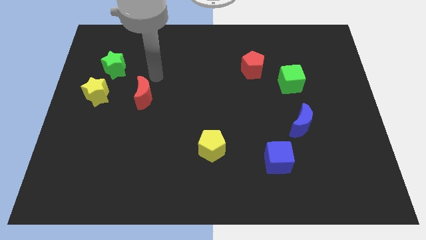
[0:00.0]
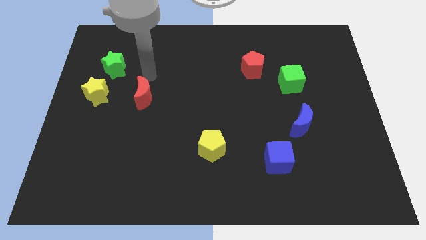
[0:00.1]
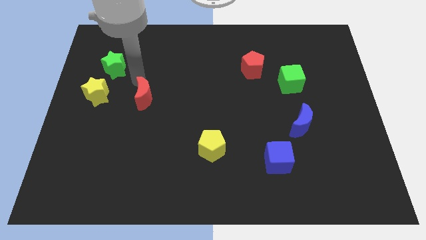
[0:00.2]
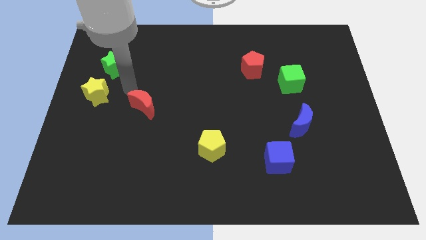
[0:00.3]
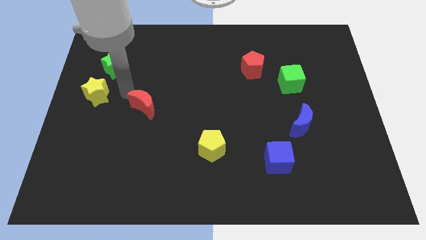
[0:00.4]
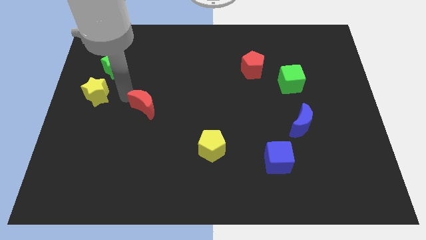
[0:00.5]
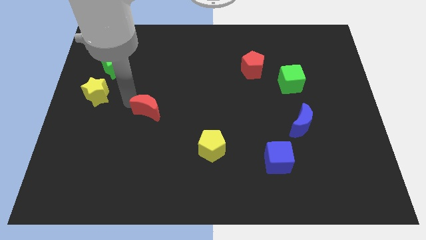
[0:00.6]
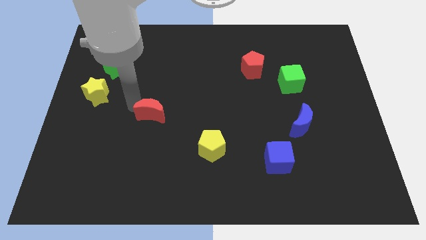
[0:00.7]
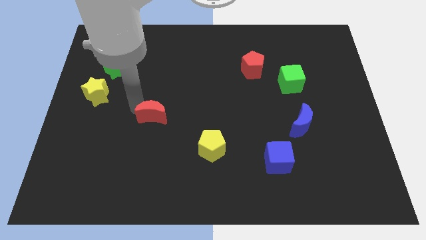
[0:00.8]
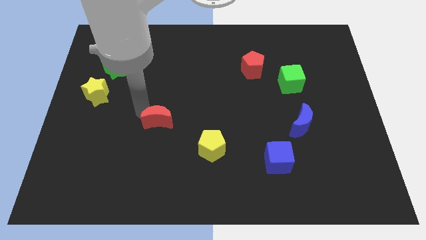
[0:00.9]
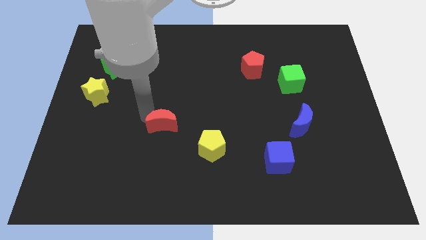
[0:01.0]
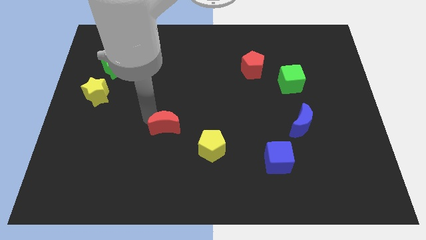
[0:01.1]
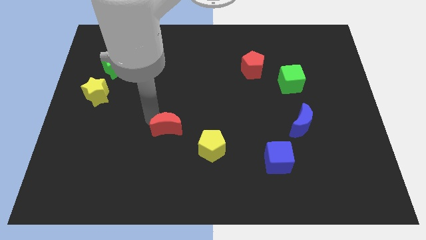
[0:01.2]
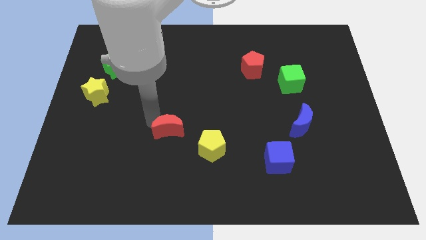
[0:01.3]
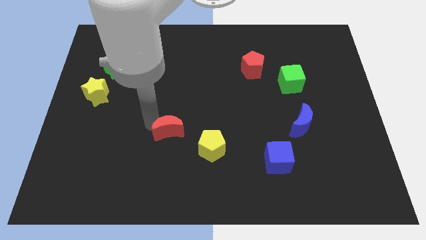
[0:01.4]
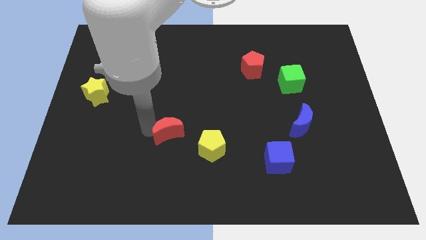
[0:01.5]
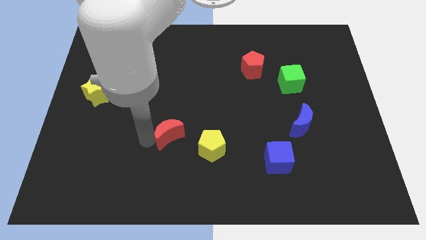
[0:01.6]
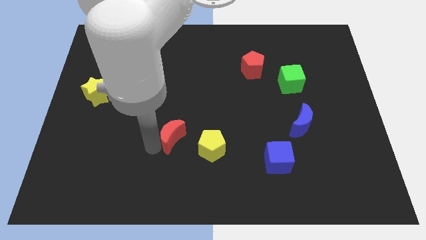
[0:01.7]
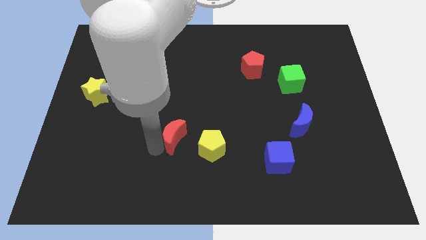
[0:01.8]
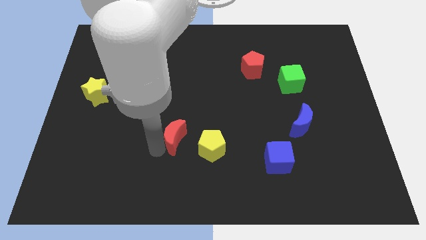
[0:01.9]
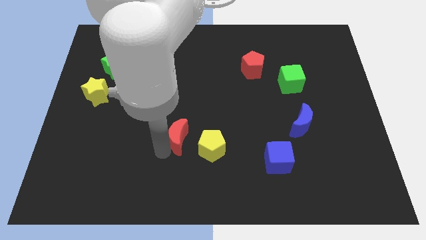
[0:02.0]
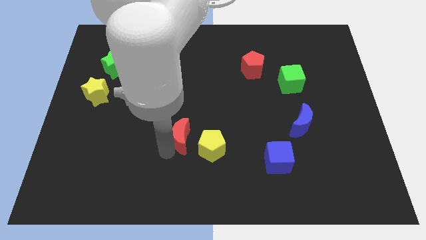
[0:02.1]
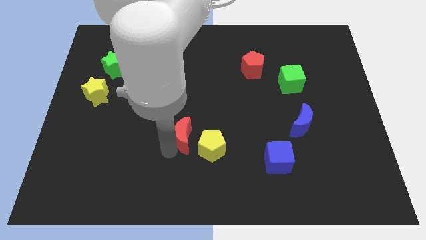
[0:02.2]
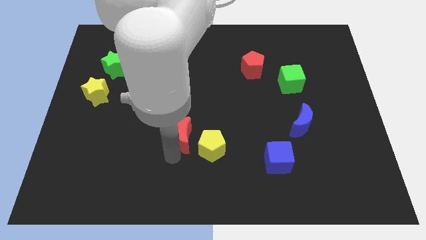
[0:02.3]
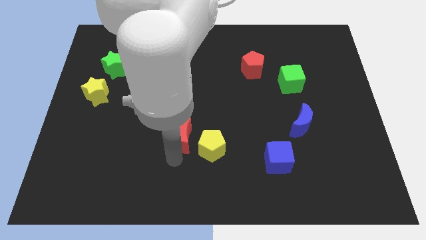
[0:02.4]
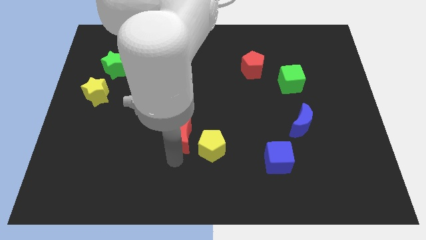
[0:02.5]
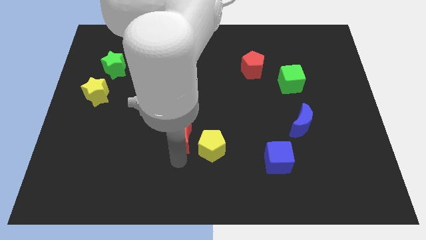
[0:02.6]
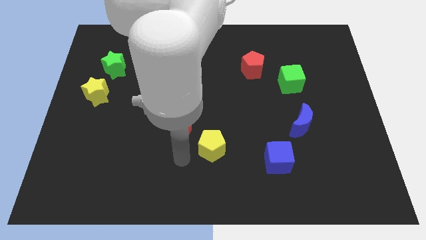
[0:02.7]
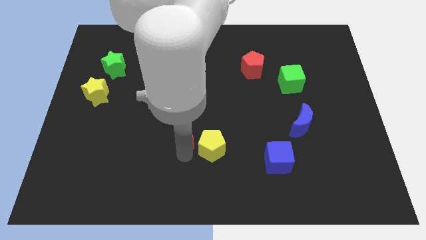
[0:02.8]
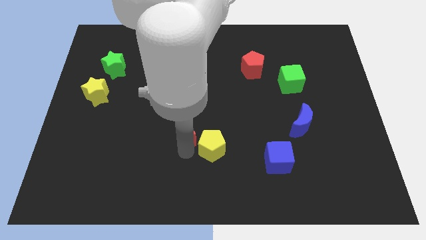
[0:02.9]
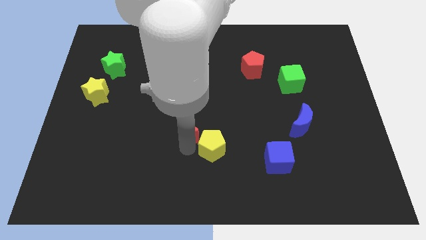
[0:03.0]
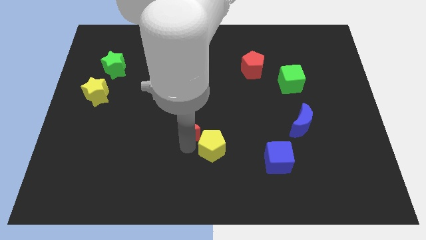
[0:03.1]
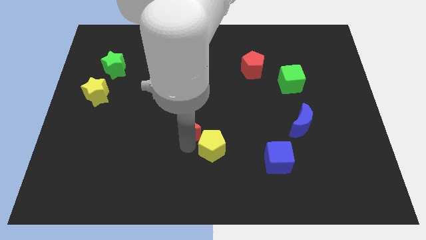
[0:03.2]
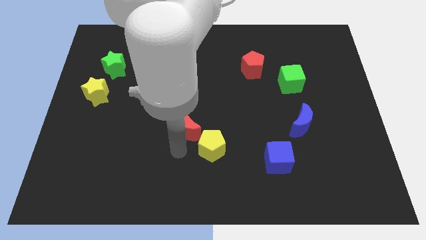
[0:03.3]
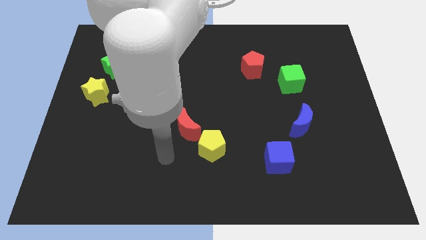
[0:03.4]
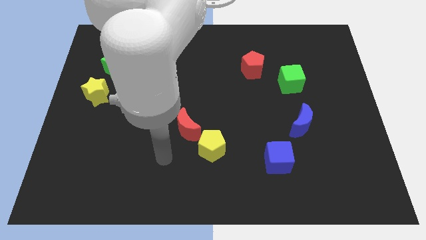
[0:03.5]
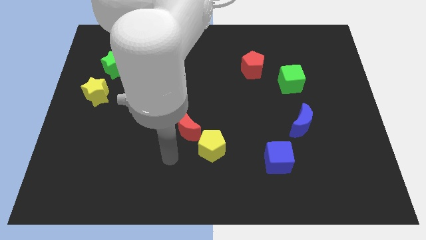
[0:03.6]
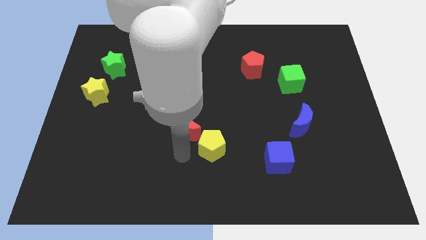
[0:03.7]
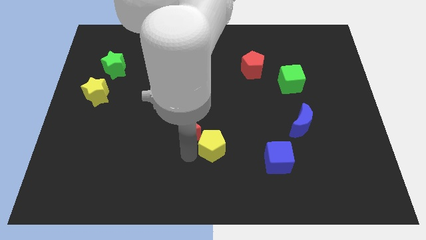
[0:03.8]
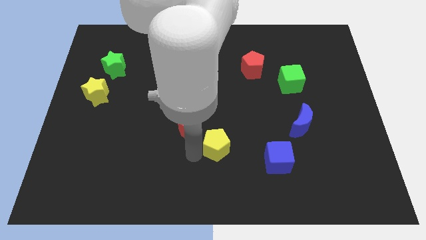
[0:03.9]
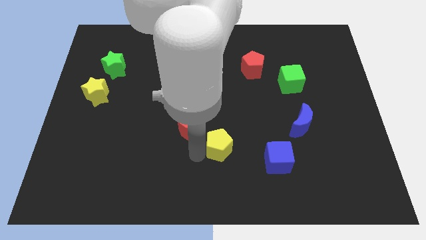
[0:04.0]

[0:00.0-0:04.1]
move the red crescent to the top left of the yellow pentagon

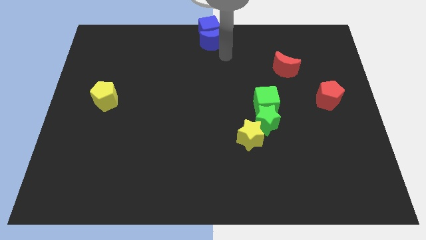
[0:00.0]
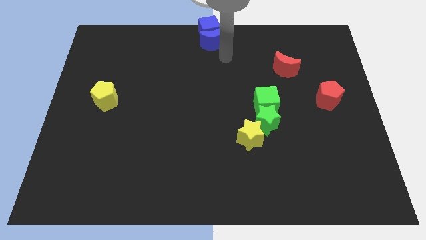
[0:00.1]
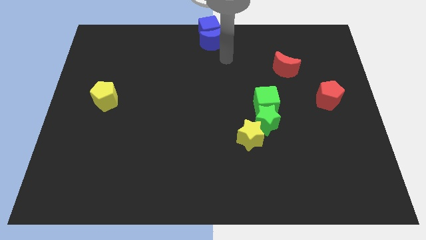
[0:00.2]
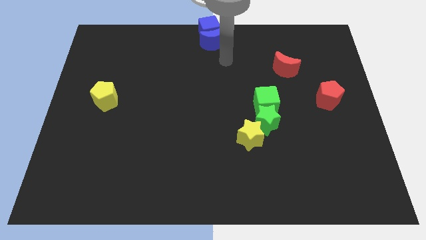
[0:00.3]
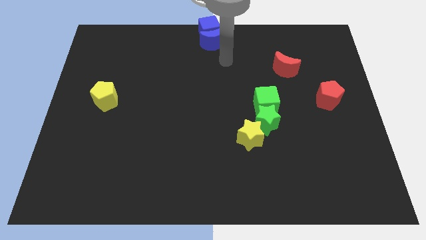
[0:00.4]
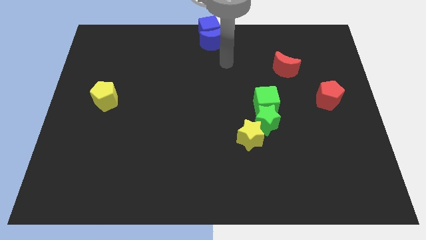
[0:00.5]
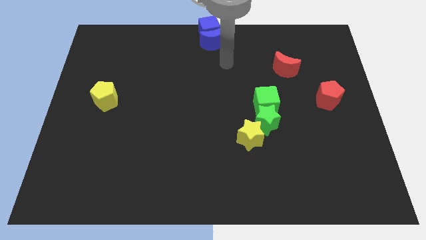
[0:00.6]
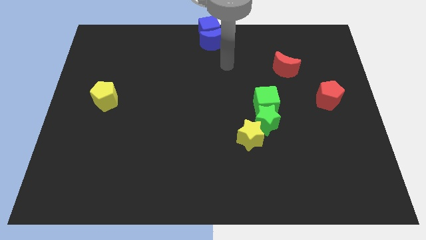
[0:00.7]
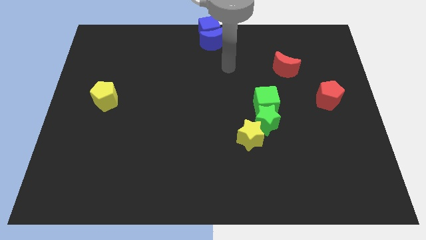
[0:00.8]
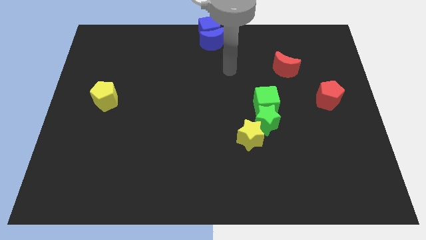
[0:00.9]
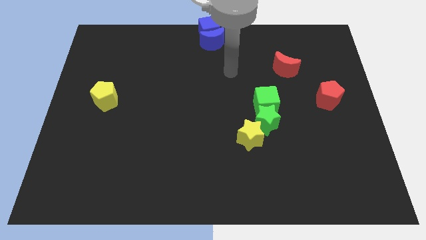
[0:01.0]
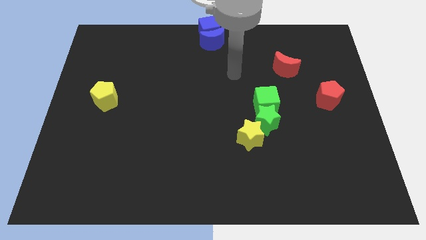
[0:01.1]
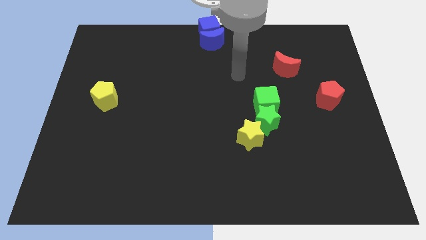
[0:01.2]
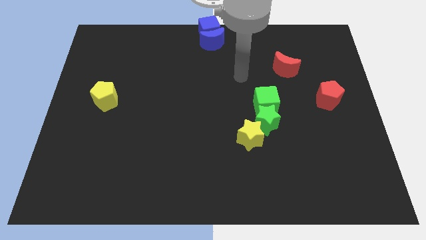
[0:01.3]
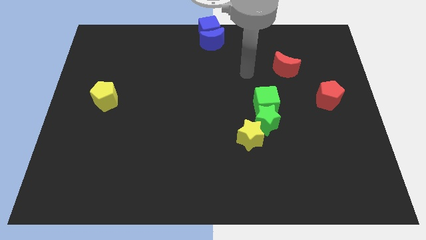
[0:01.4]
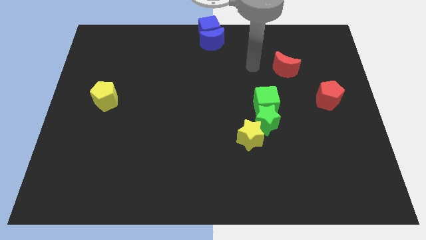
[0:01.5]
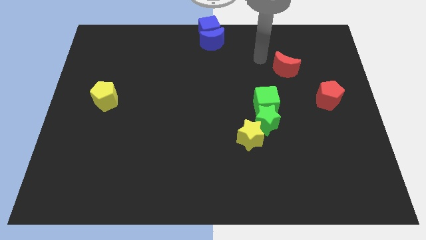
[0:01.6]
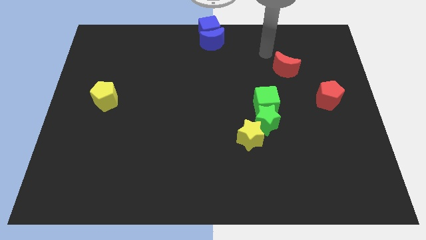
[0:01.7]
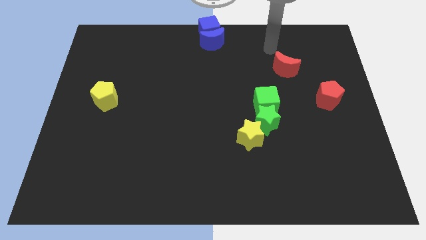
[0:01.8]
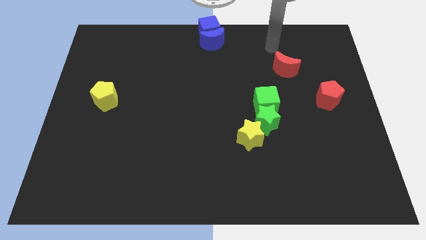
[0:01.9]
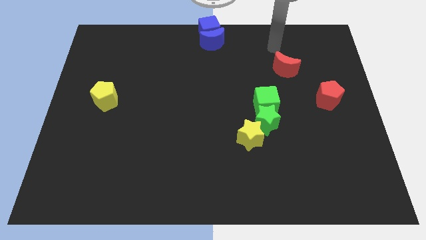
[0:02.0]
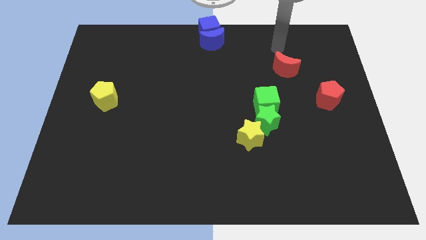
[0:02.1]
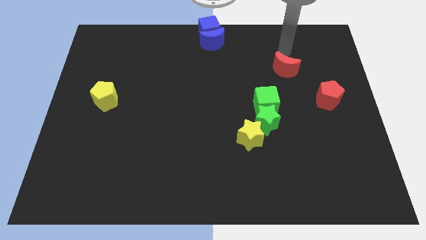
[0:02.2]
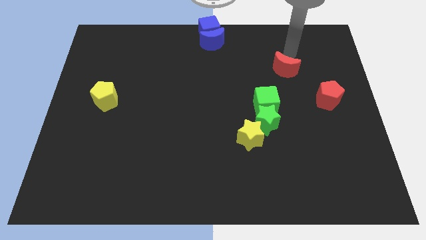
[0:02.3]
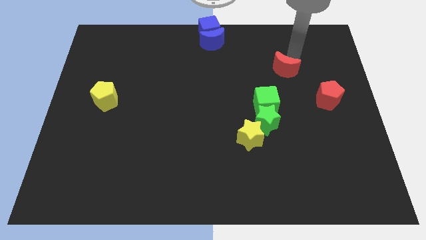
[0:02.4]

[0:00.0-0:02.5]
move your arma nd point on top of red moon

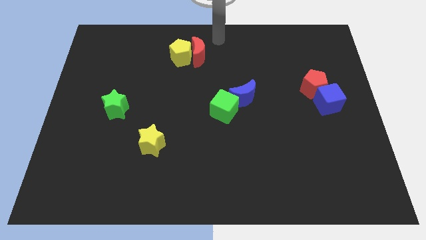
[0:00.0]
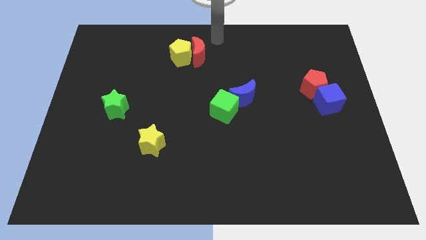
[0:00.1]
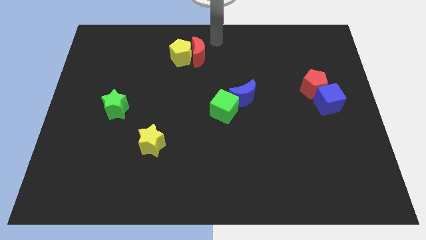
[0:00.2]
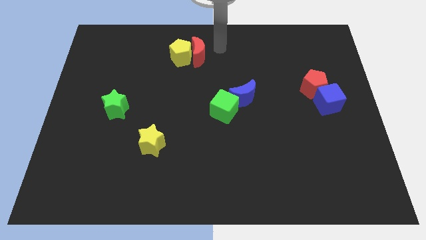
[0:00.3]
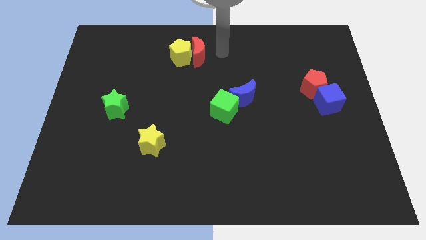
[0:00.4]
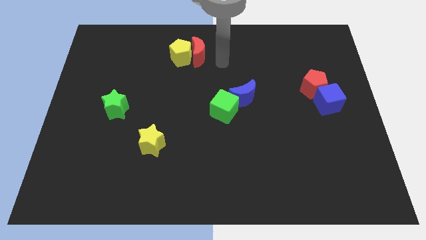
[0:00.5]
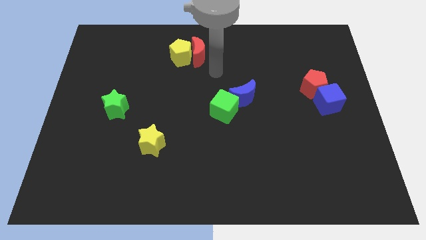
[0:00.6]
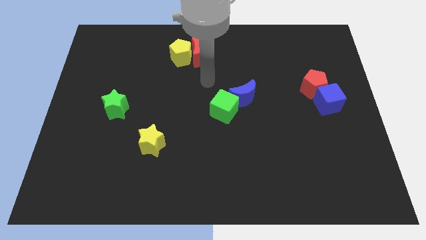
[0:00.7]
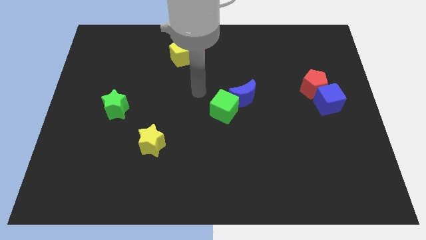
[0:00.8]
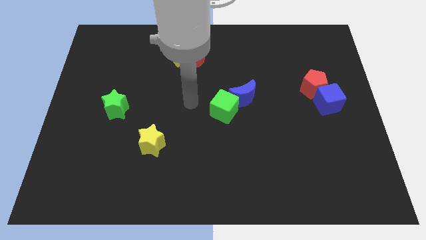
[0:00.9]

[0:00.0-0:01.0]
move the arm to the center of board

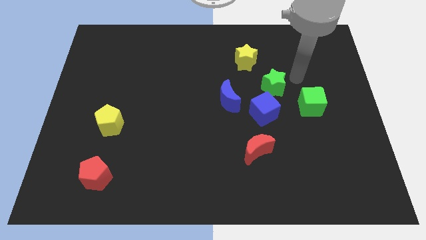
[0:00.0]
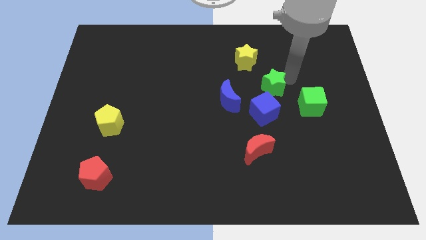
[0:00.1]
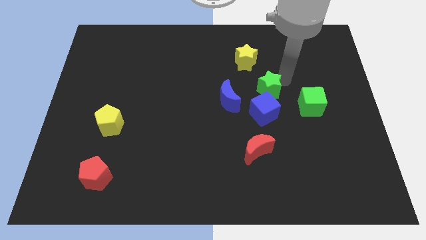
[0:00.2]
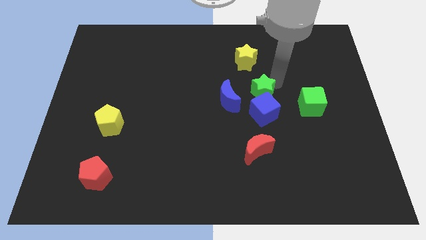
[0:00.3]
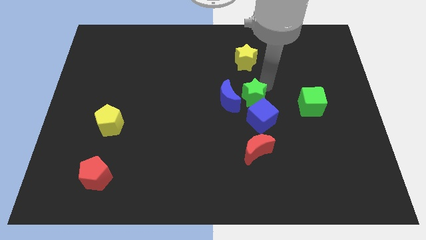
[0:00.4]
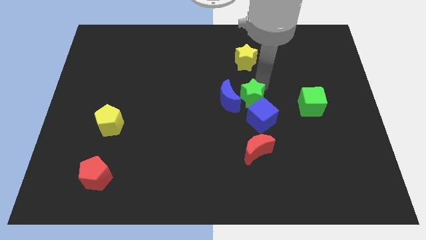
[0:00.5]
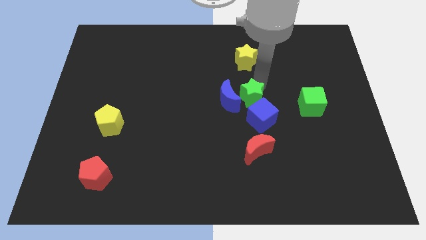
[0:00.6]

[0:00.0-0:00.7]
place the green star at the right side of the blue crescent

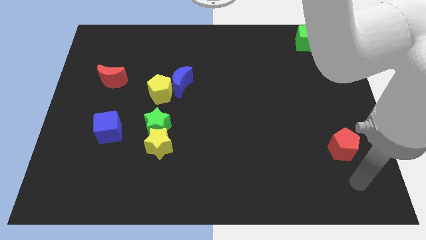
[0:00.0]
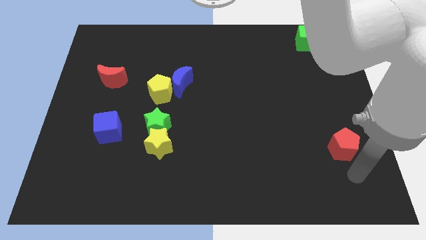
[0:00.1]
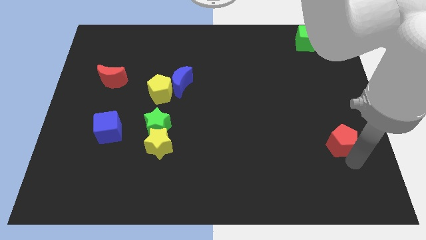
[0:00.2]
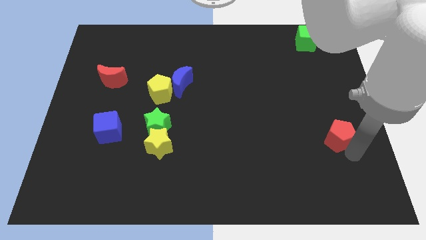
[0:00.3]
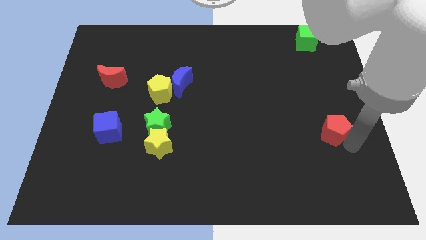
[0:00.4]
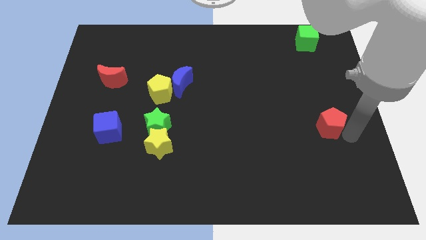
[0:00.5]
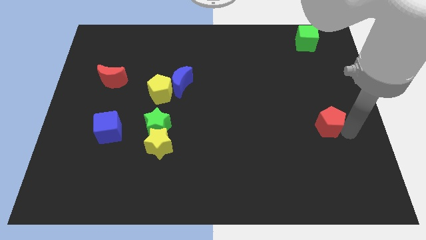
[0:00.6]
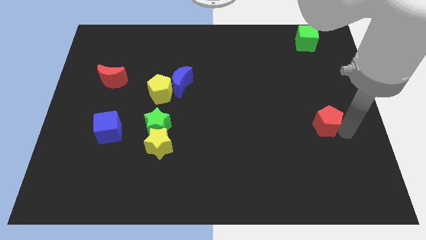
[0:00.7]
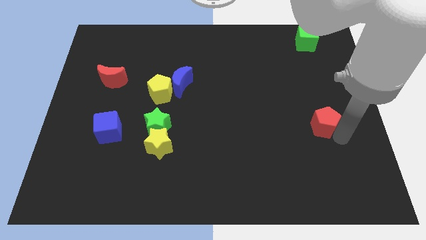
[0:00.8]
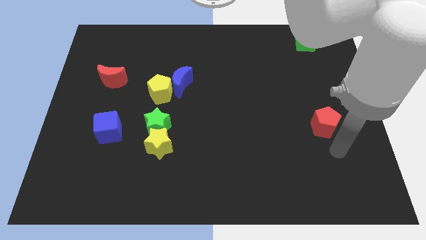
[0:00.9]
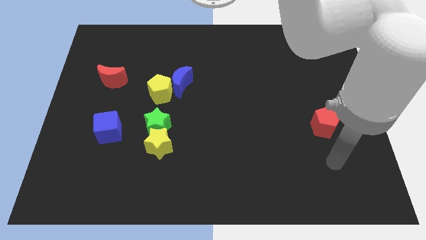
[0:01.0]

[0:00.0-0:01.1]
move the red pentagon parallel to the green star
